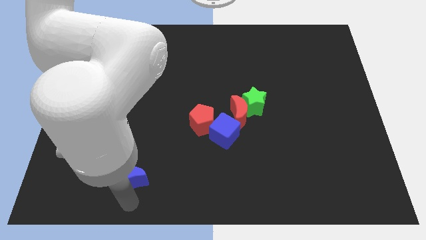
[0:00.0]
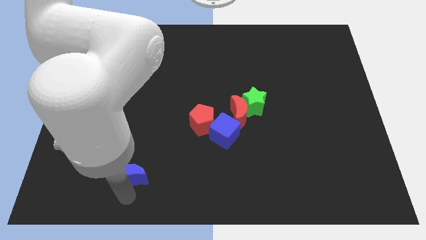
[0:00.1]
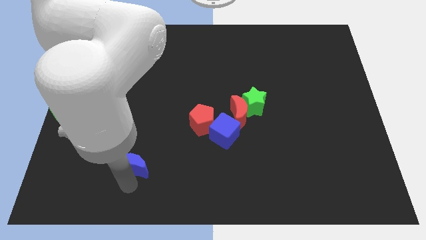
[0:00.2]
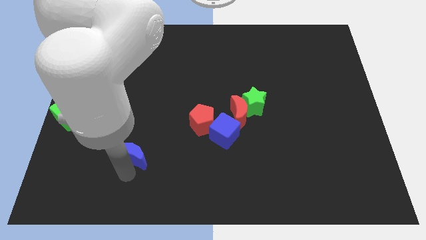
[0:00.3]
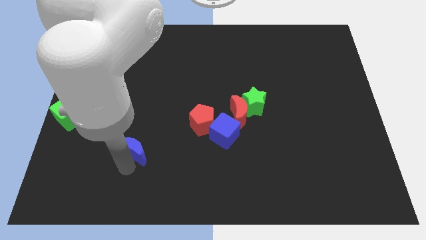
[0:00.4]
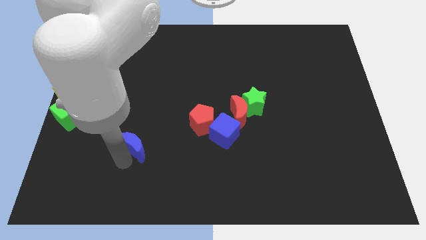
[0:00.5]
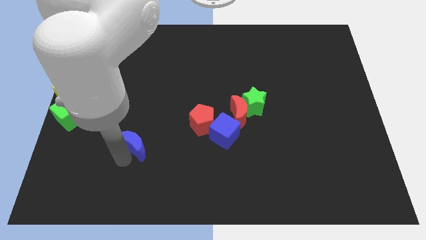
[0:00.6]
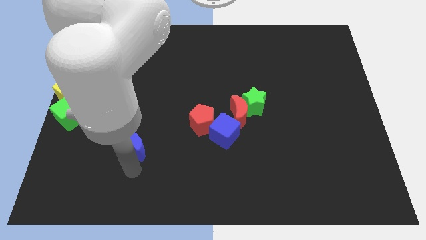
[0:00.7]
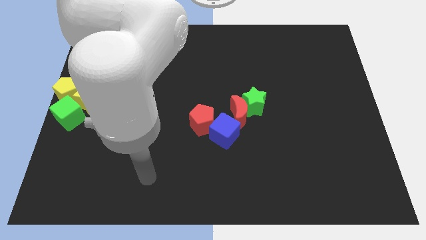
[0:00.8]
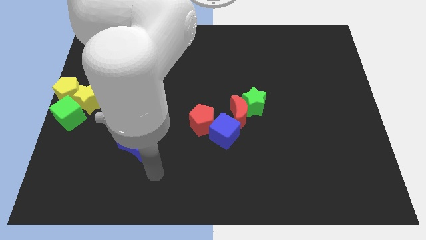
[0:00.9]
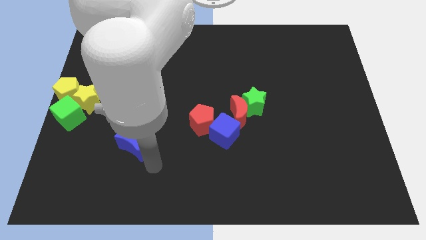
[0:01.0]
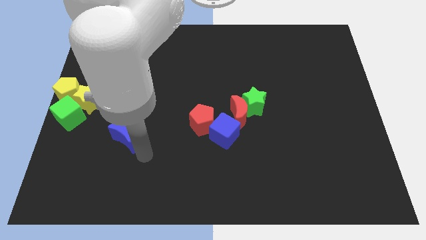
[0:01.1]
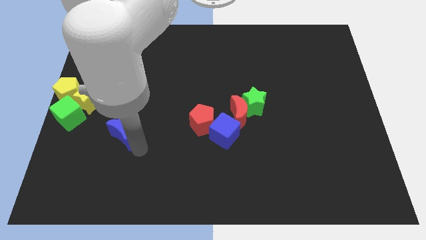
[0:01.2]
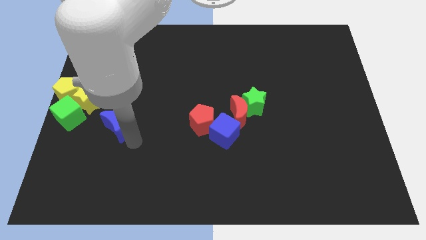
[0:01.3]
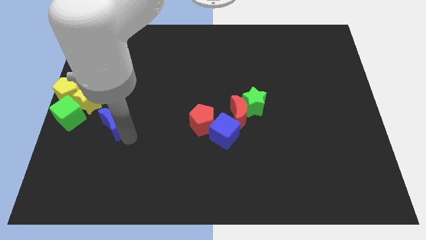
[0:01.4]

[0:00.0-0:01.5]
move the blue moon to the right of the green cube

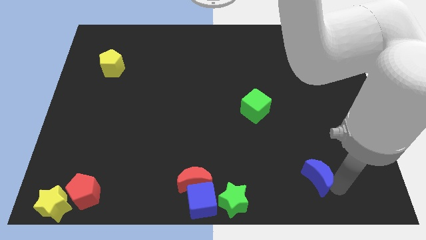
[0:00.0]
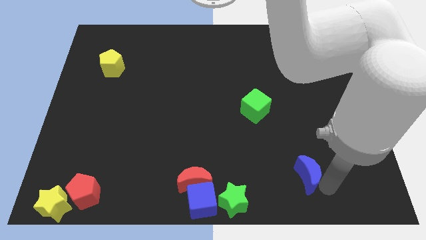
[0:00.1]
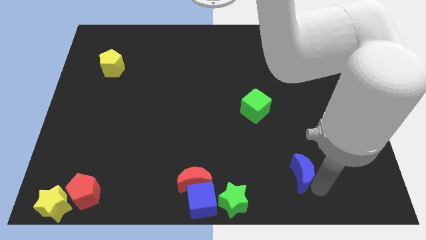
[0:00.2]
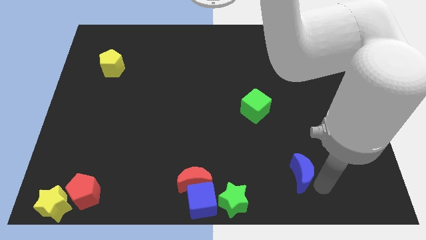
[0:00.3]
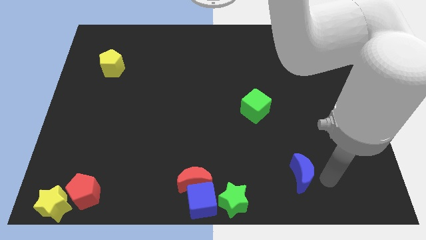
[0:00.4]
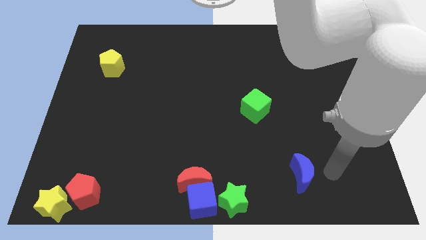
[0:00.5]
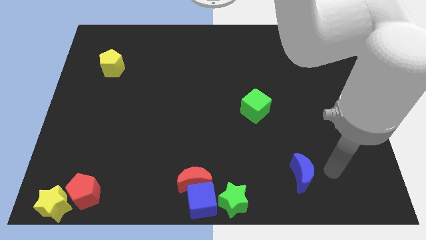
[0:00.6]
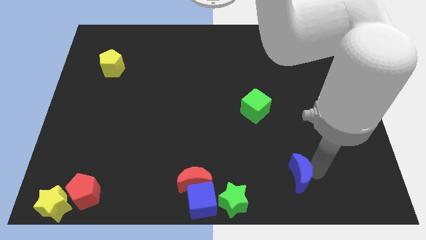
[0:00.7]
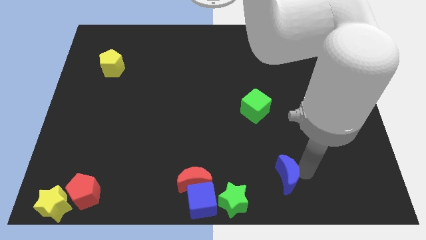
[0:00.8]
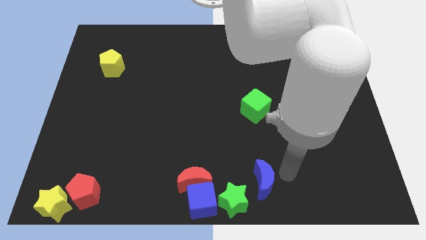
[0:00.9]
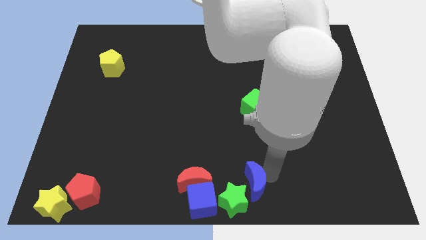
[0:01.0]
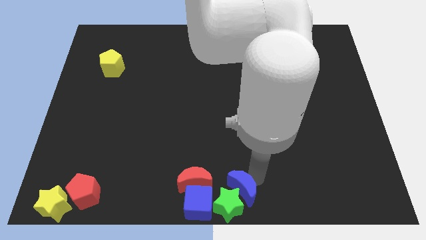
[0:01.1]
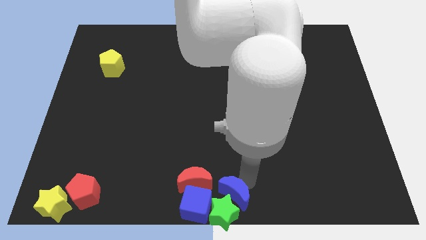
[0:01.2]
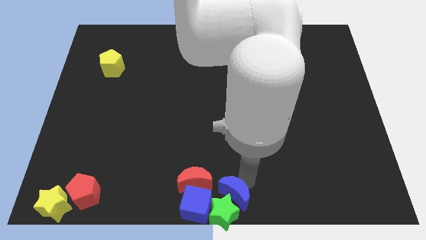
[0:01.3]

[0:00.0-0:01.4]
push the blue moon into the group of blocks

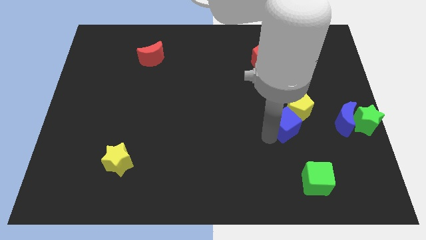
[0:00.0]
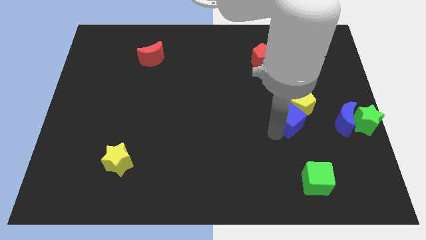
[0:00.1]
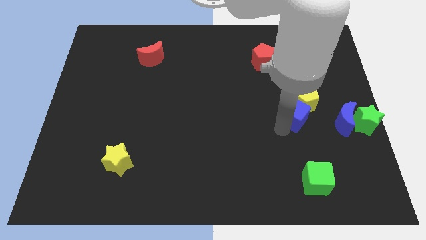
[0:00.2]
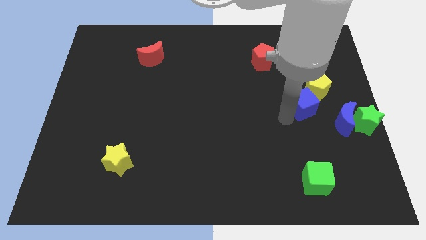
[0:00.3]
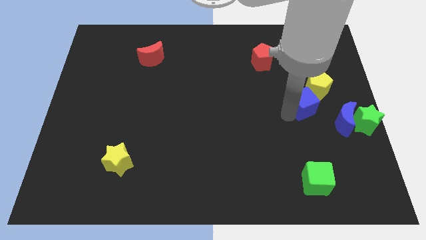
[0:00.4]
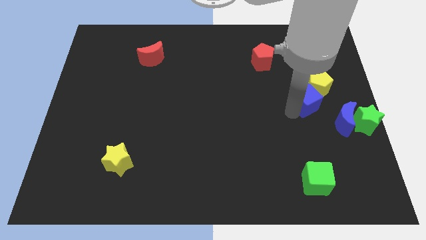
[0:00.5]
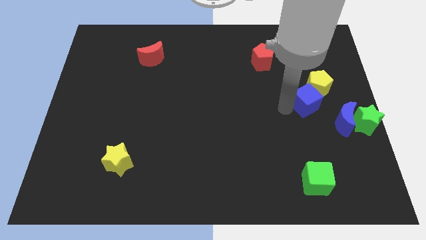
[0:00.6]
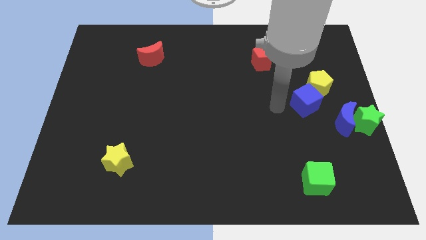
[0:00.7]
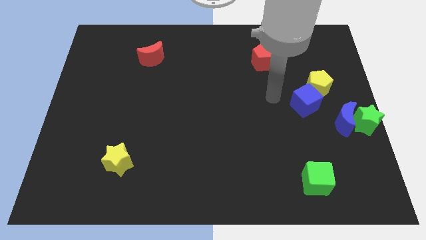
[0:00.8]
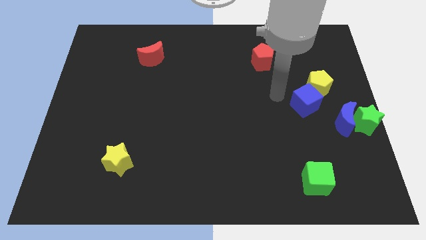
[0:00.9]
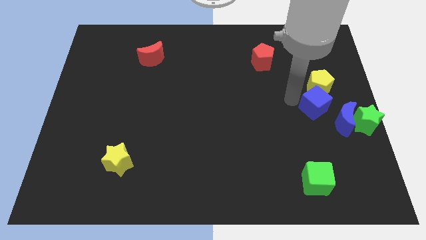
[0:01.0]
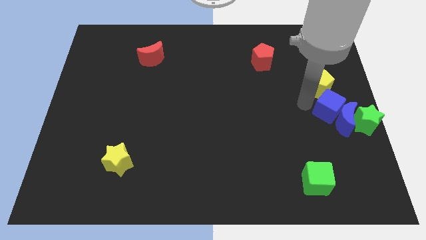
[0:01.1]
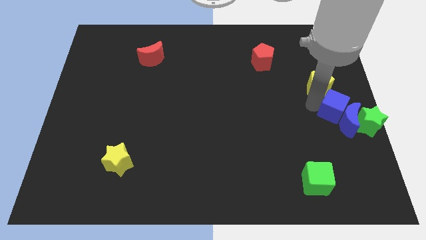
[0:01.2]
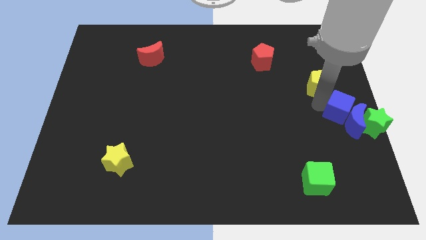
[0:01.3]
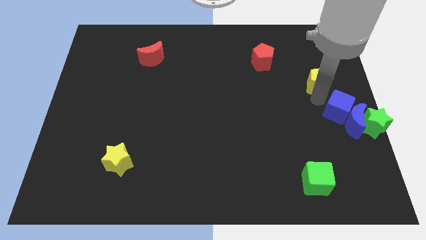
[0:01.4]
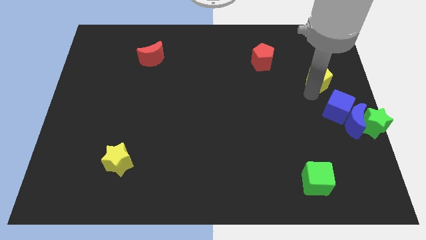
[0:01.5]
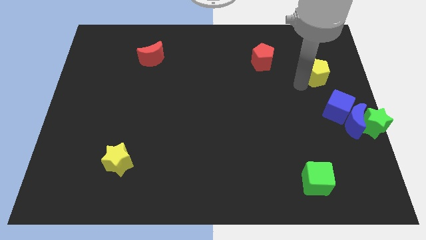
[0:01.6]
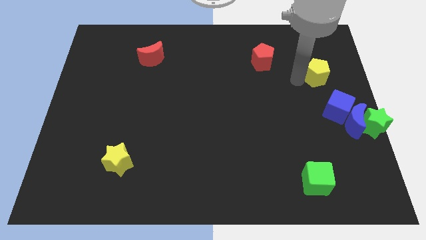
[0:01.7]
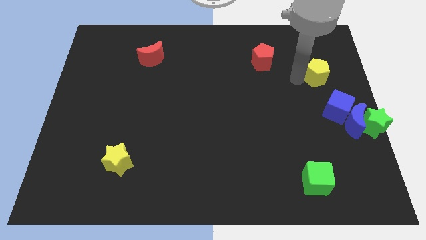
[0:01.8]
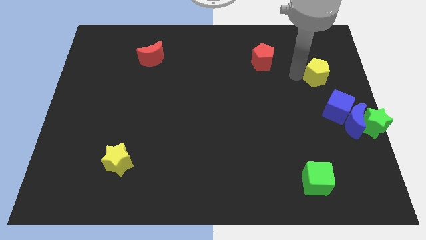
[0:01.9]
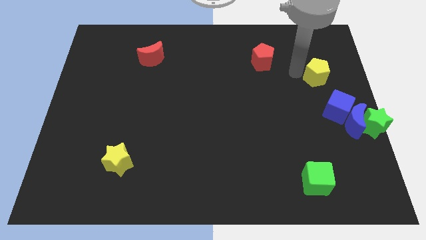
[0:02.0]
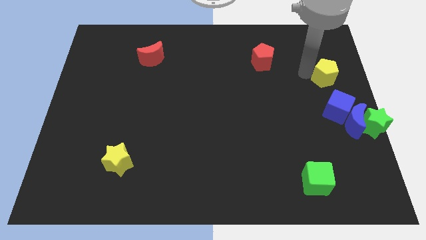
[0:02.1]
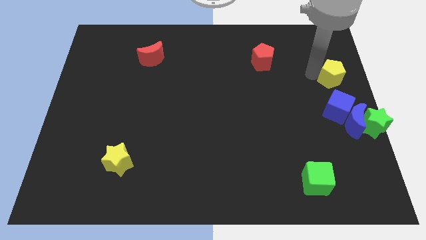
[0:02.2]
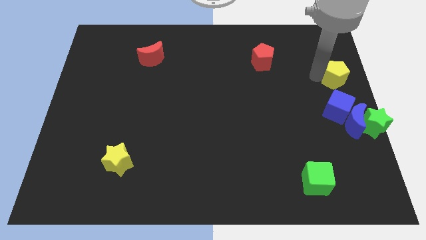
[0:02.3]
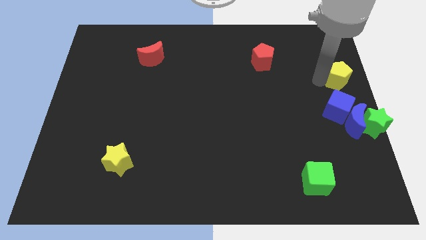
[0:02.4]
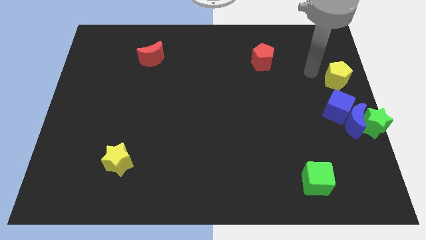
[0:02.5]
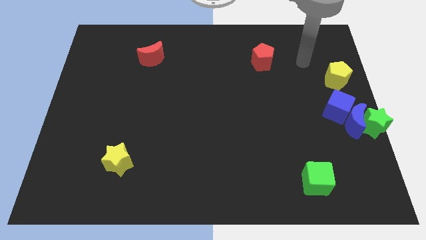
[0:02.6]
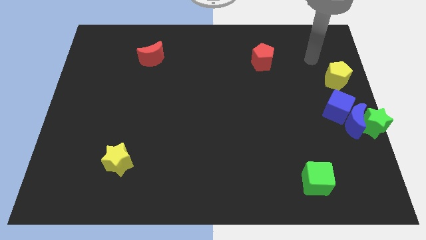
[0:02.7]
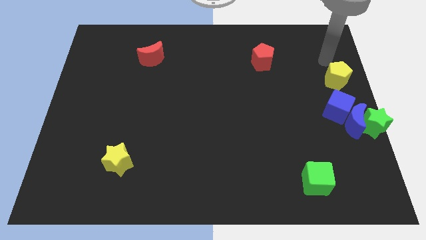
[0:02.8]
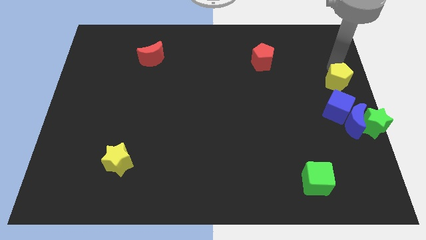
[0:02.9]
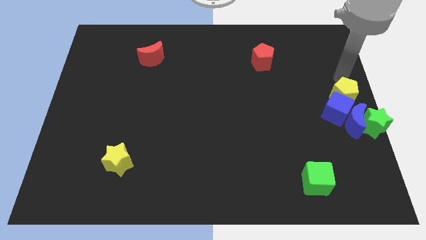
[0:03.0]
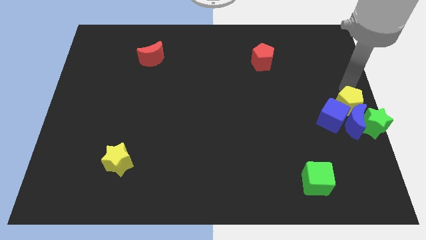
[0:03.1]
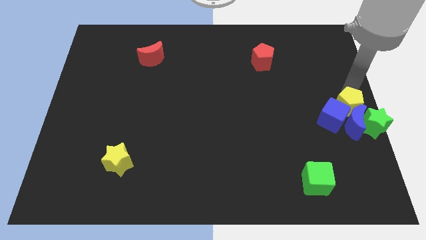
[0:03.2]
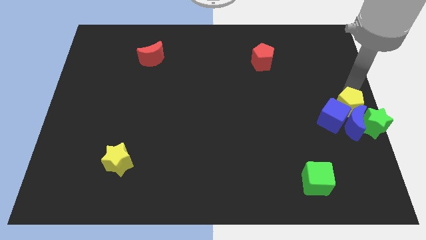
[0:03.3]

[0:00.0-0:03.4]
push yellow pentagon towards blue blocks

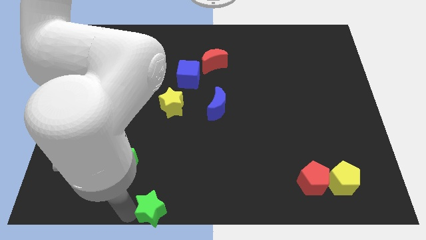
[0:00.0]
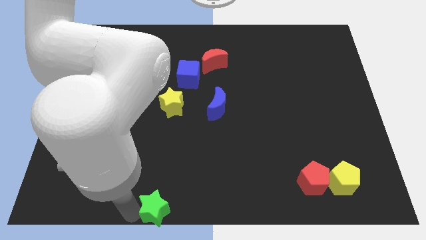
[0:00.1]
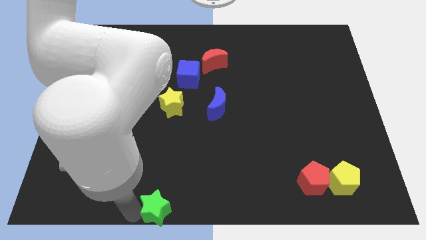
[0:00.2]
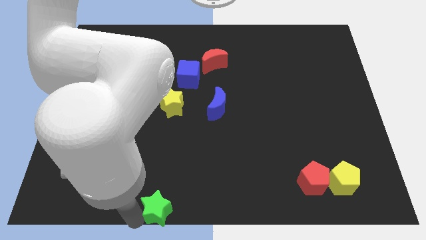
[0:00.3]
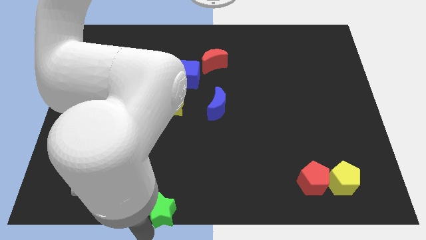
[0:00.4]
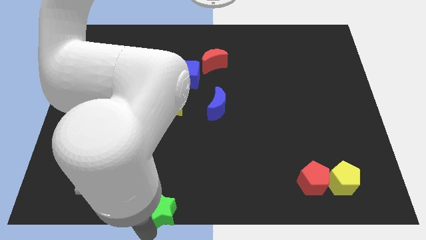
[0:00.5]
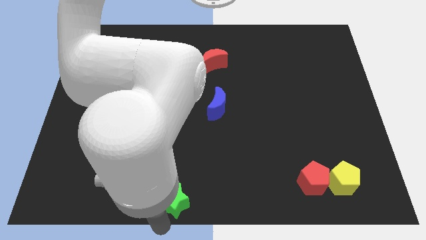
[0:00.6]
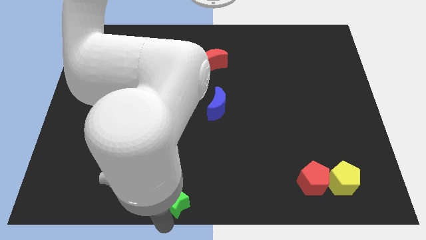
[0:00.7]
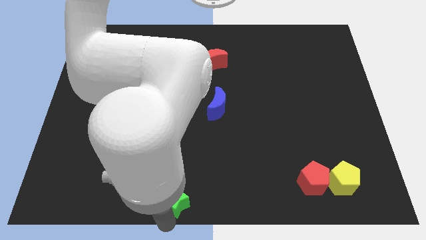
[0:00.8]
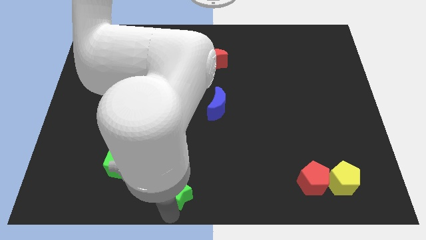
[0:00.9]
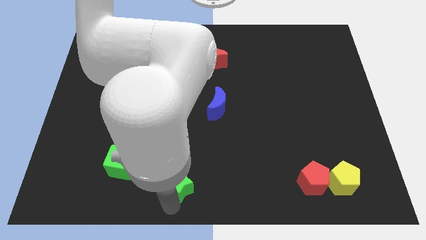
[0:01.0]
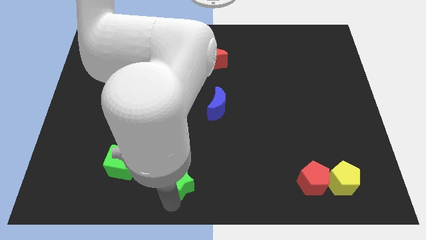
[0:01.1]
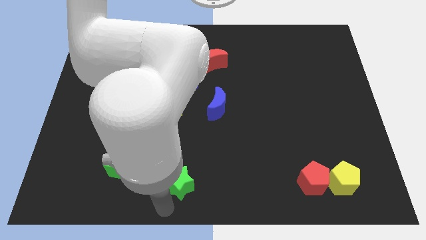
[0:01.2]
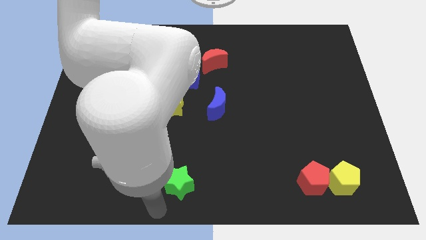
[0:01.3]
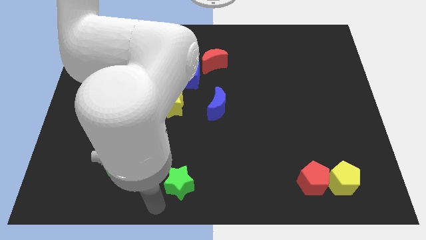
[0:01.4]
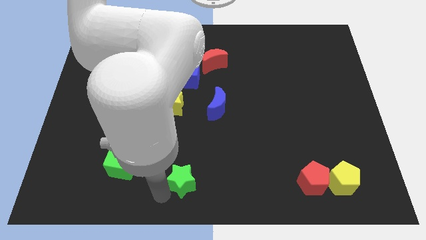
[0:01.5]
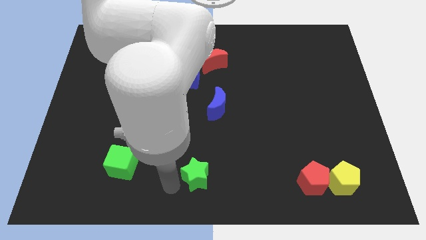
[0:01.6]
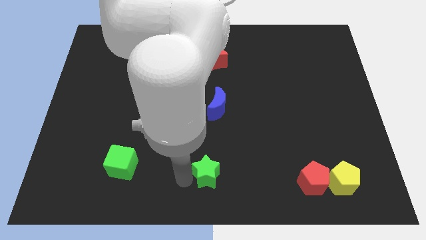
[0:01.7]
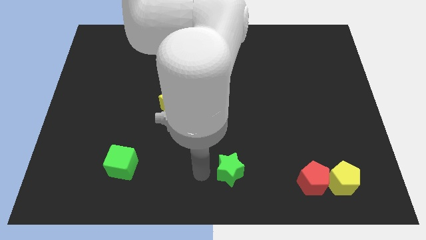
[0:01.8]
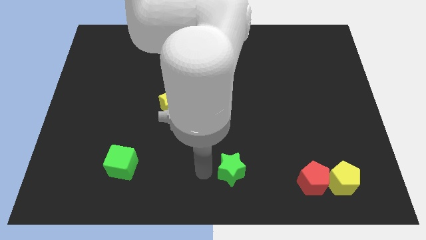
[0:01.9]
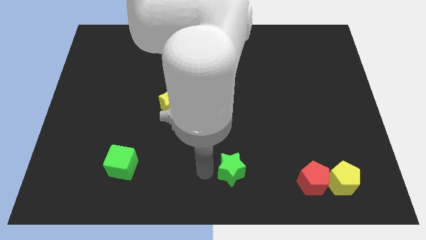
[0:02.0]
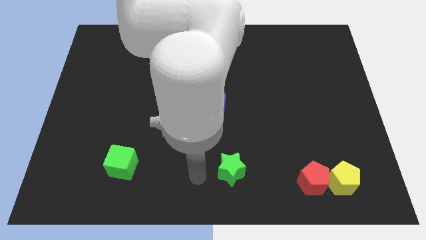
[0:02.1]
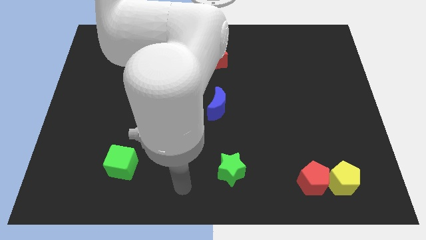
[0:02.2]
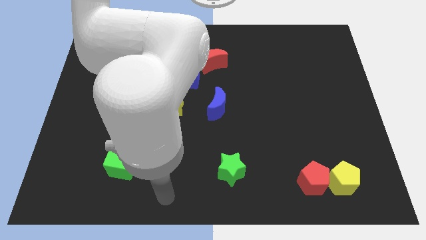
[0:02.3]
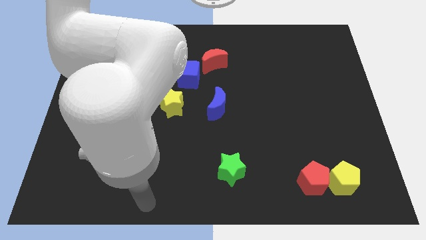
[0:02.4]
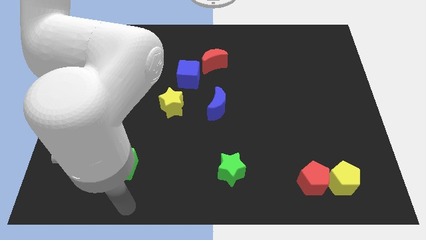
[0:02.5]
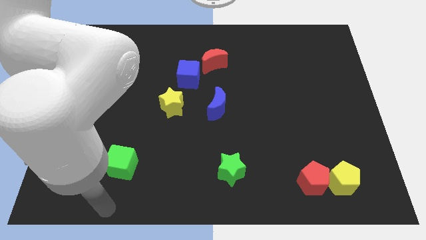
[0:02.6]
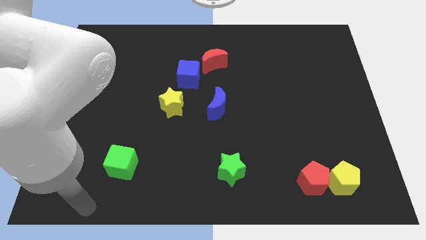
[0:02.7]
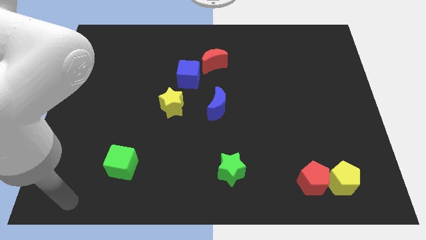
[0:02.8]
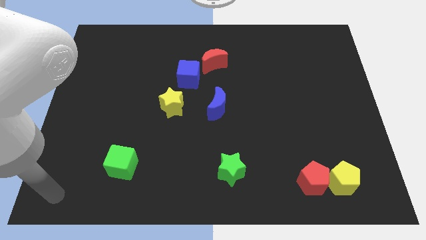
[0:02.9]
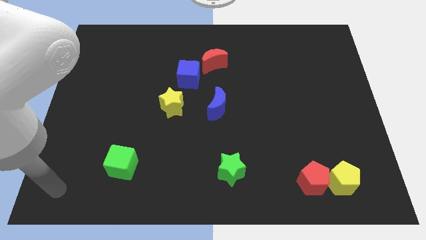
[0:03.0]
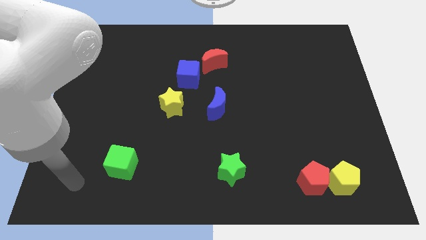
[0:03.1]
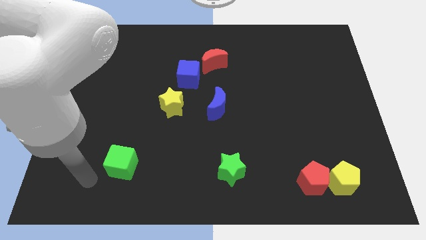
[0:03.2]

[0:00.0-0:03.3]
place the green star horizontally to the right side of the green cube
